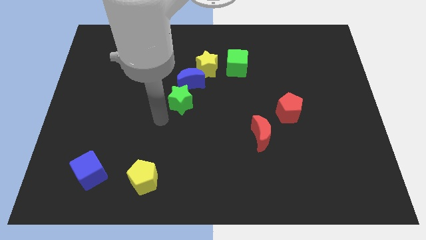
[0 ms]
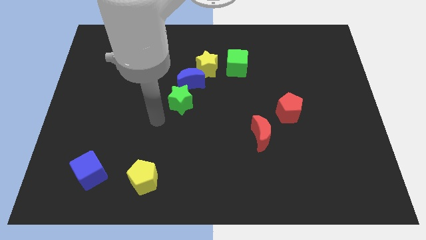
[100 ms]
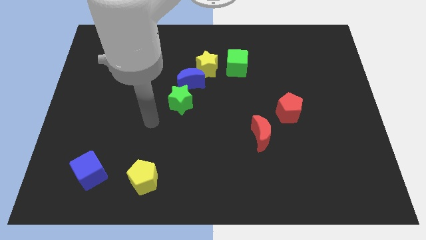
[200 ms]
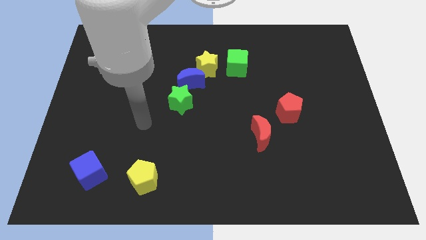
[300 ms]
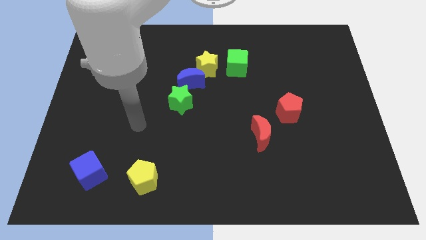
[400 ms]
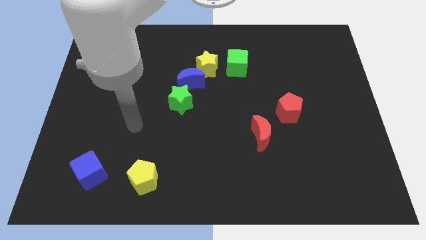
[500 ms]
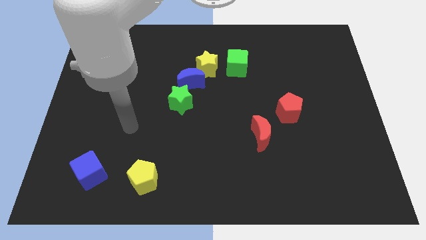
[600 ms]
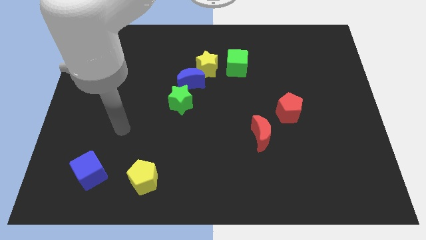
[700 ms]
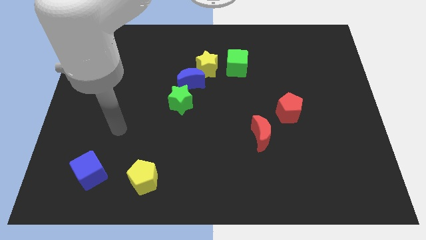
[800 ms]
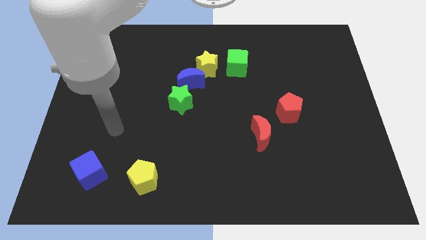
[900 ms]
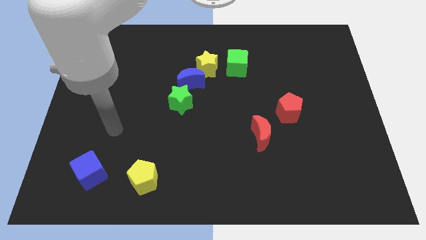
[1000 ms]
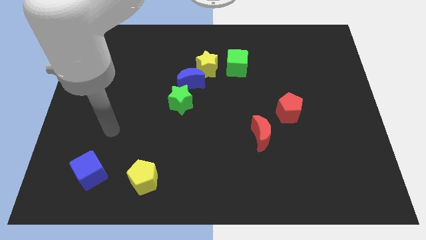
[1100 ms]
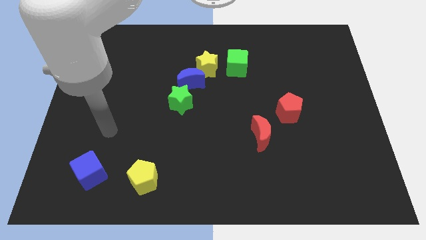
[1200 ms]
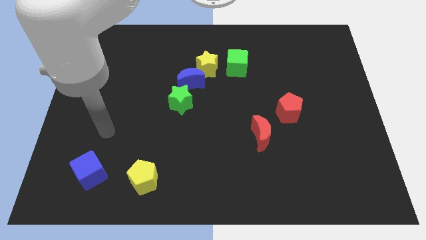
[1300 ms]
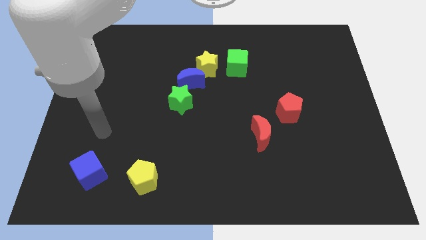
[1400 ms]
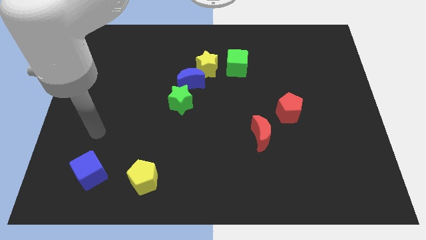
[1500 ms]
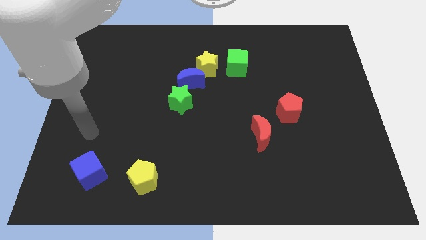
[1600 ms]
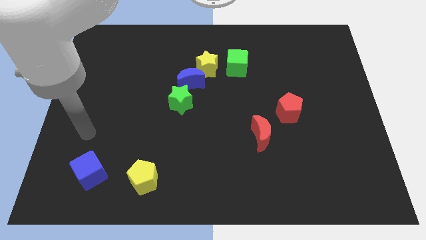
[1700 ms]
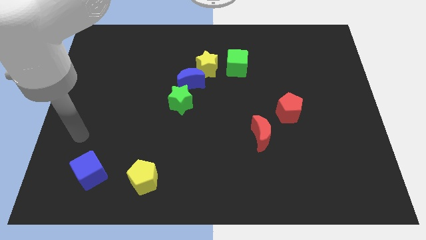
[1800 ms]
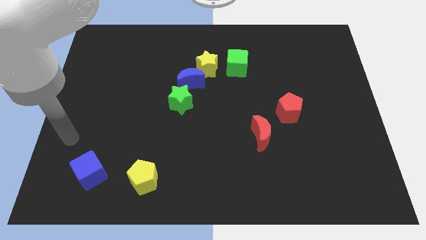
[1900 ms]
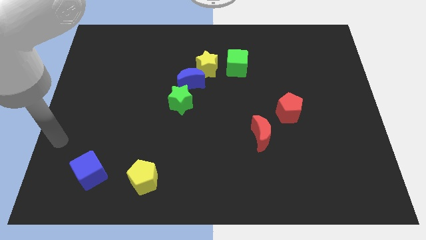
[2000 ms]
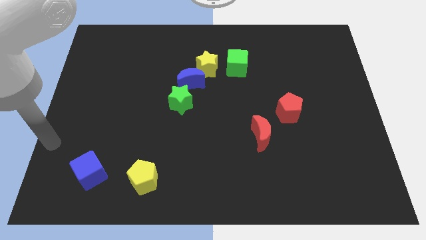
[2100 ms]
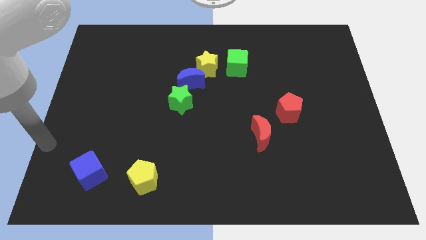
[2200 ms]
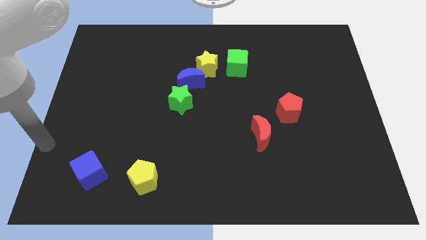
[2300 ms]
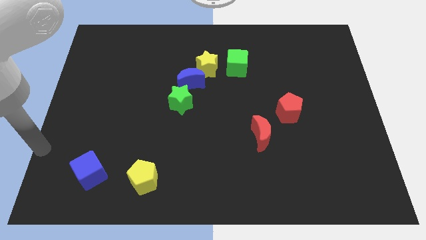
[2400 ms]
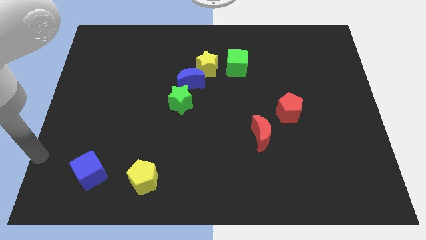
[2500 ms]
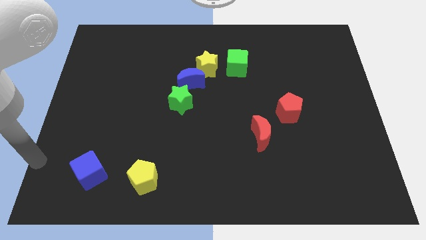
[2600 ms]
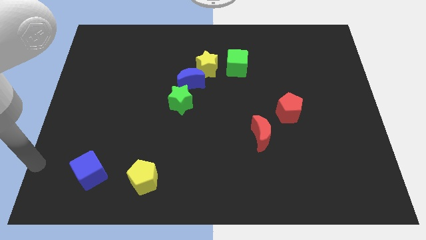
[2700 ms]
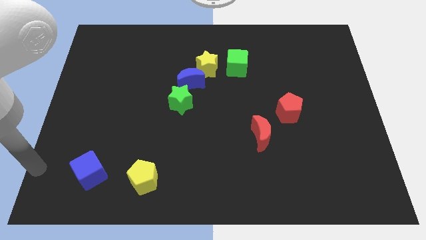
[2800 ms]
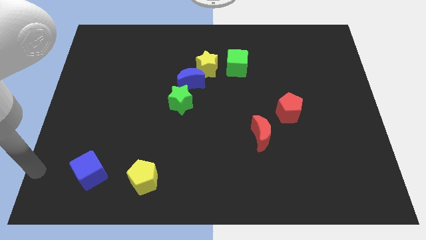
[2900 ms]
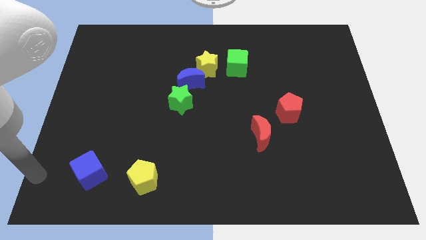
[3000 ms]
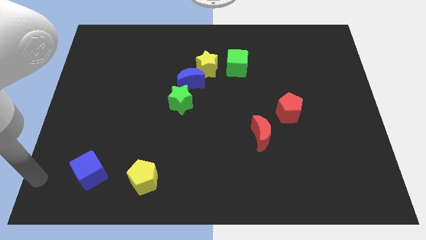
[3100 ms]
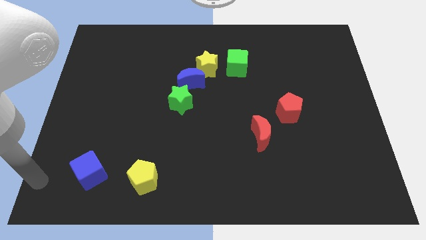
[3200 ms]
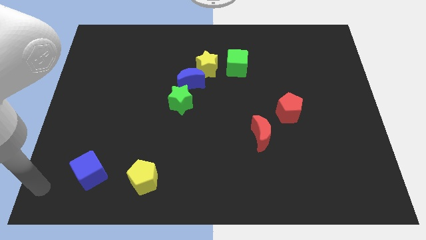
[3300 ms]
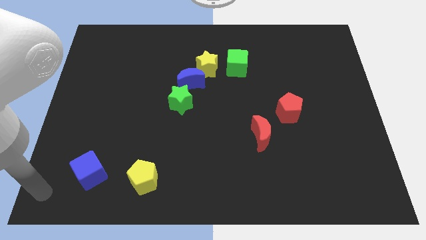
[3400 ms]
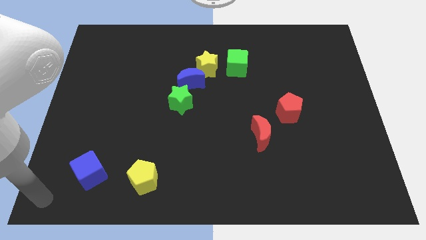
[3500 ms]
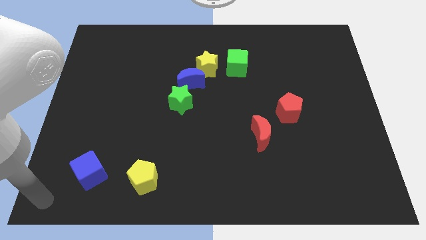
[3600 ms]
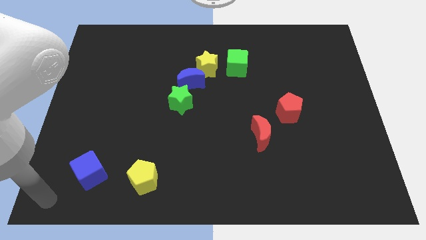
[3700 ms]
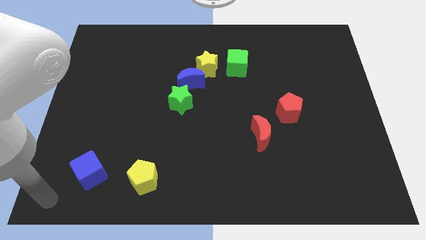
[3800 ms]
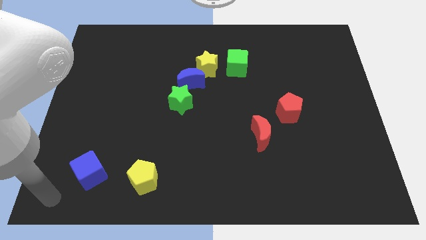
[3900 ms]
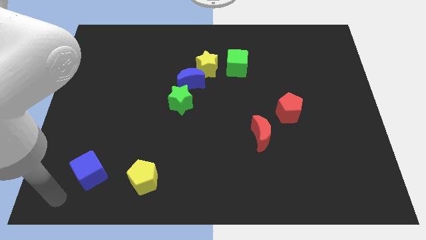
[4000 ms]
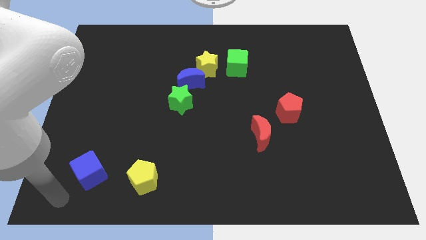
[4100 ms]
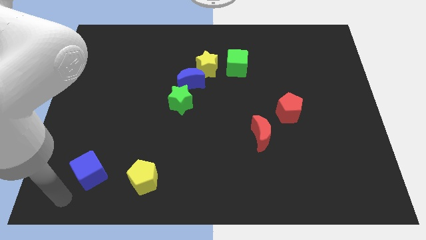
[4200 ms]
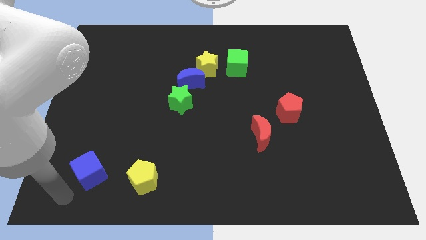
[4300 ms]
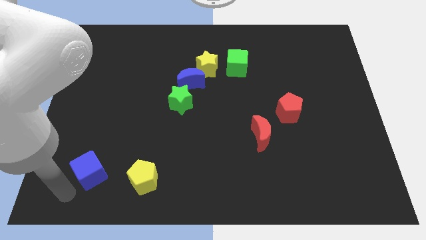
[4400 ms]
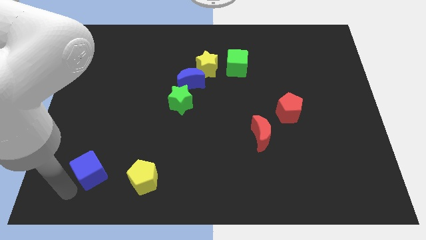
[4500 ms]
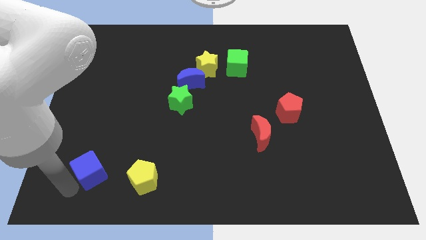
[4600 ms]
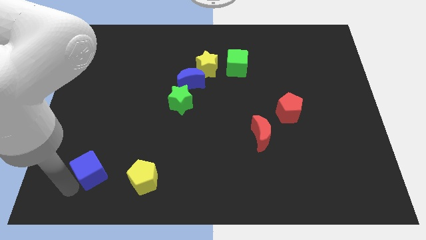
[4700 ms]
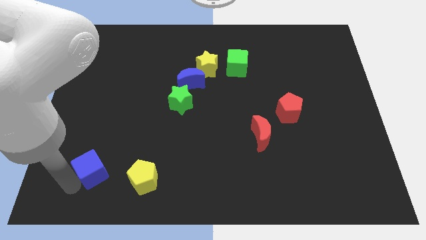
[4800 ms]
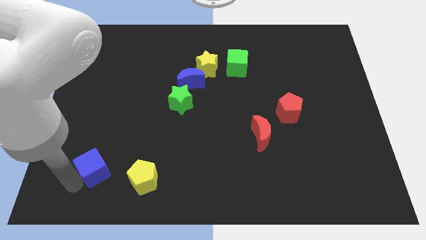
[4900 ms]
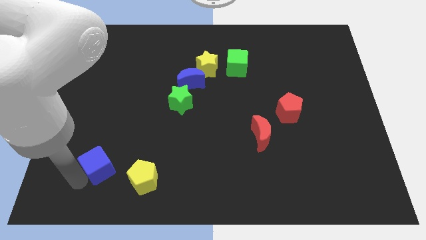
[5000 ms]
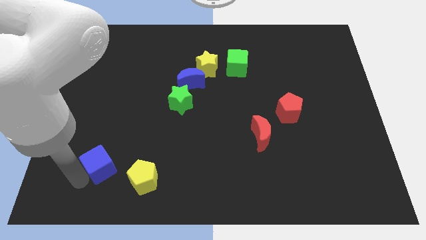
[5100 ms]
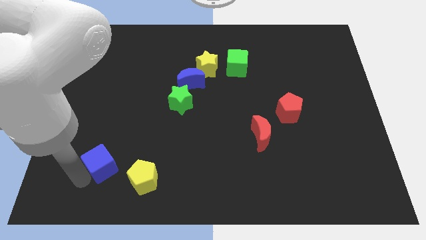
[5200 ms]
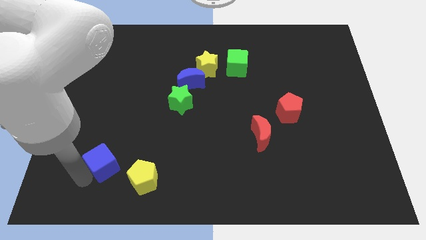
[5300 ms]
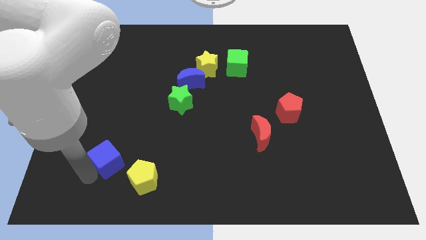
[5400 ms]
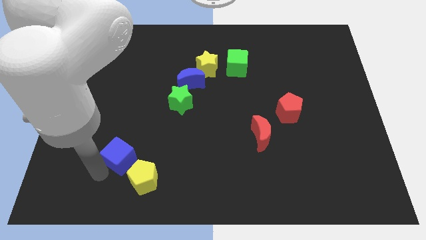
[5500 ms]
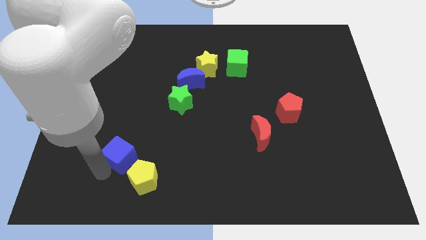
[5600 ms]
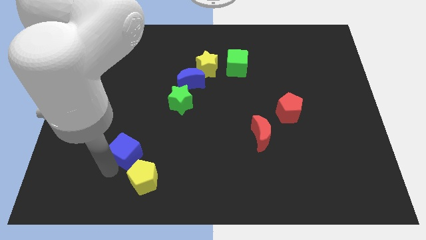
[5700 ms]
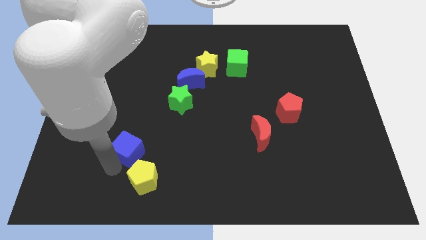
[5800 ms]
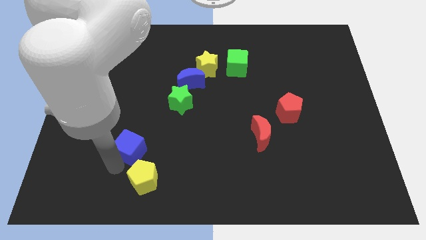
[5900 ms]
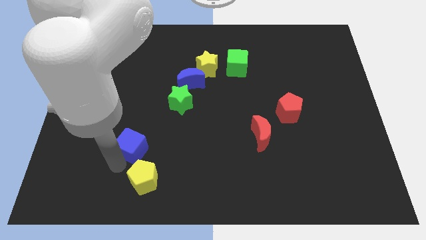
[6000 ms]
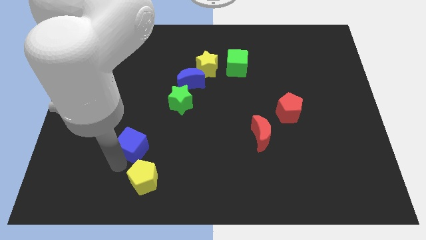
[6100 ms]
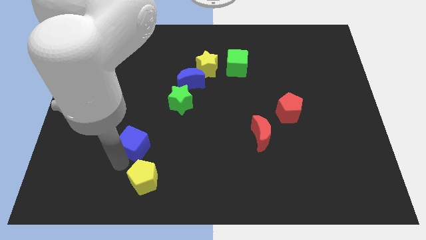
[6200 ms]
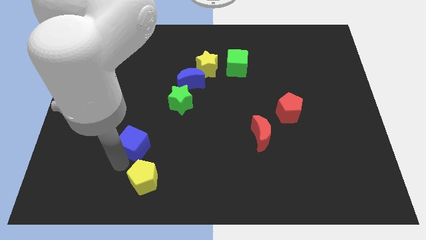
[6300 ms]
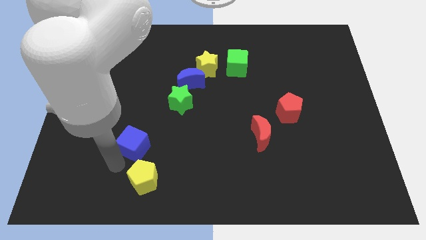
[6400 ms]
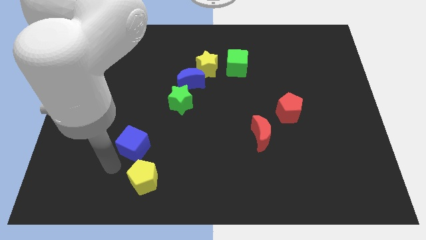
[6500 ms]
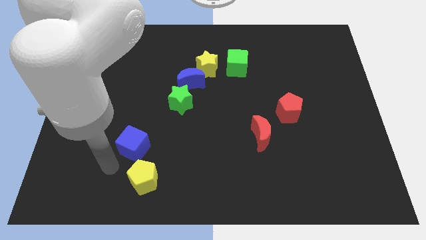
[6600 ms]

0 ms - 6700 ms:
push the blue cube to the top of the yellow pentagon

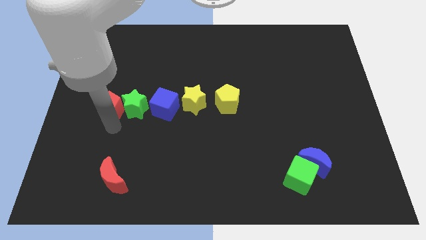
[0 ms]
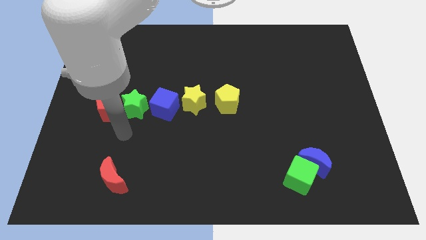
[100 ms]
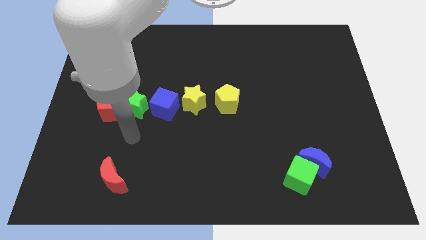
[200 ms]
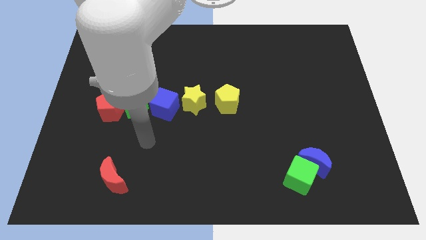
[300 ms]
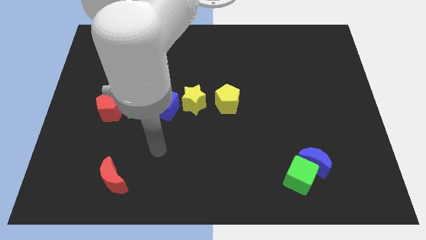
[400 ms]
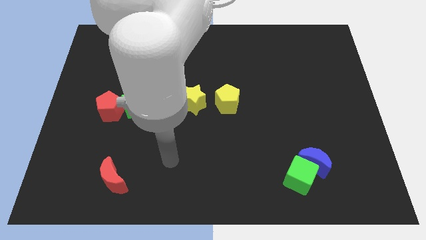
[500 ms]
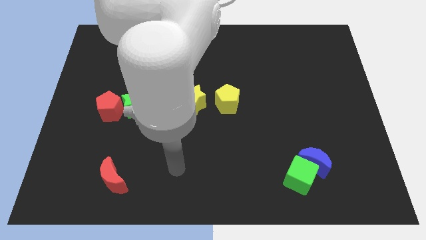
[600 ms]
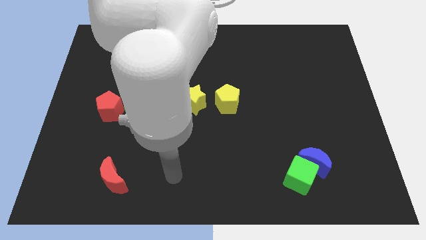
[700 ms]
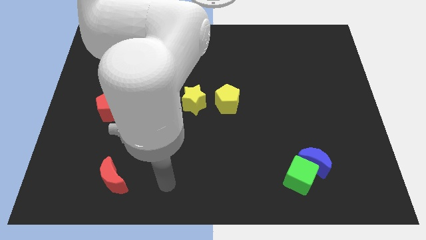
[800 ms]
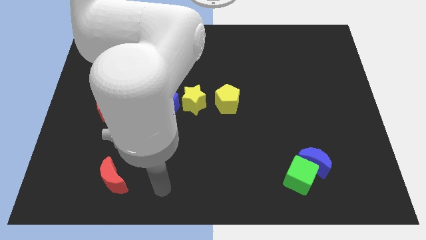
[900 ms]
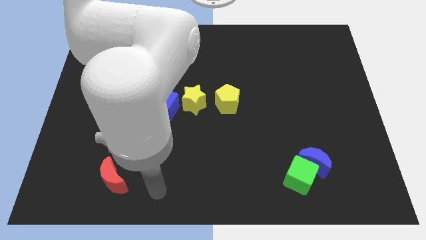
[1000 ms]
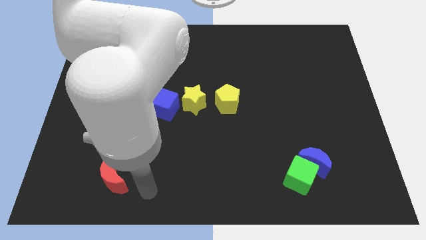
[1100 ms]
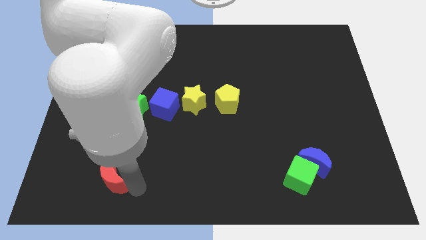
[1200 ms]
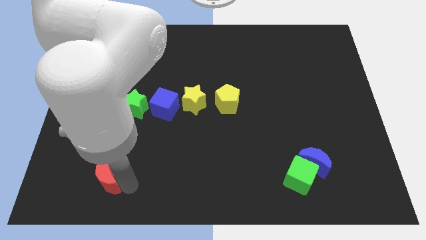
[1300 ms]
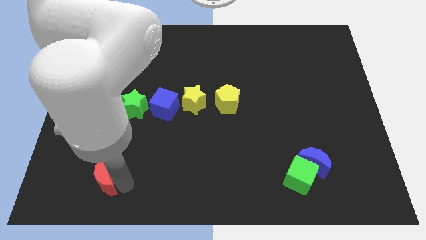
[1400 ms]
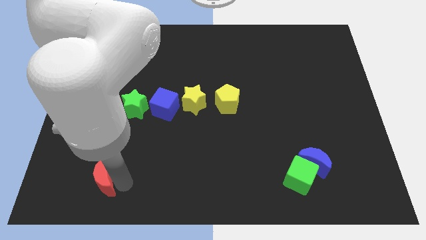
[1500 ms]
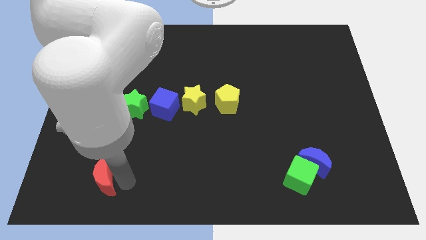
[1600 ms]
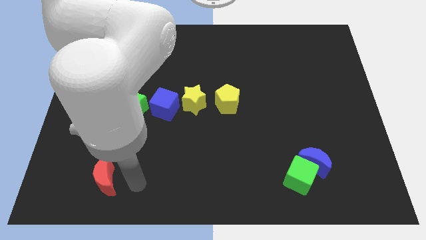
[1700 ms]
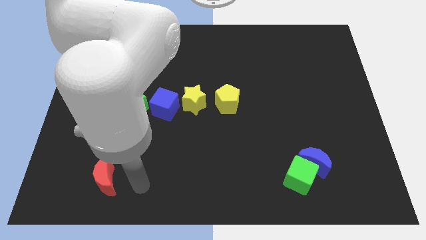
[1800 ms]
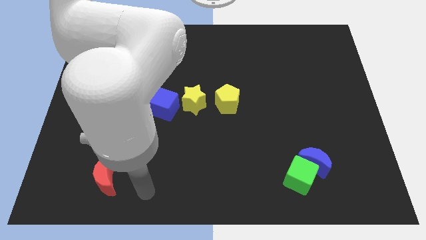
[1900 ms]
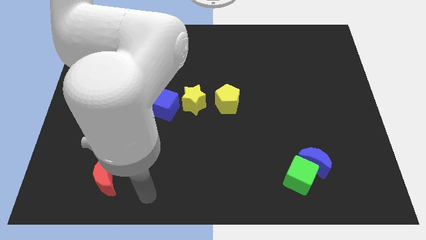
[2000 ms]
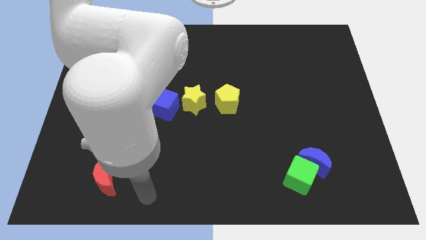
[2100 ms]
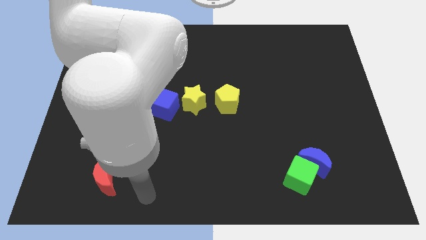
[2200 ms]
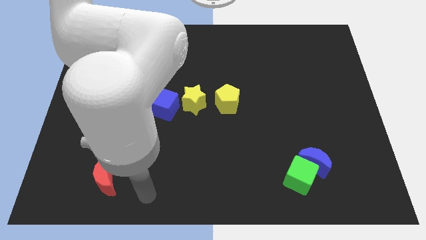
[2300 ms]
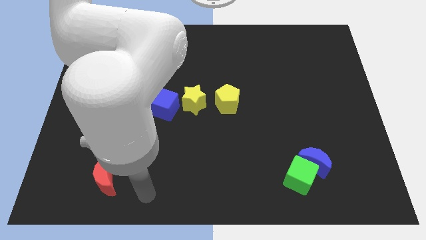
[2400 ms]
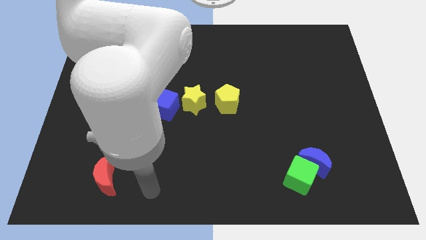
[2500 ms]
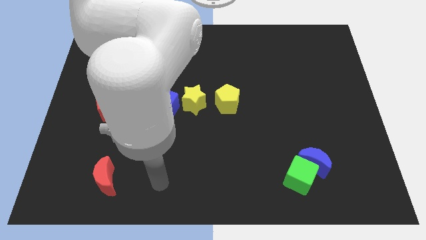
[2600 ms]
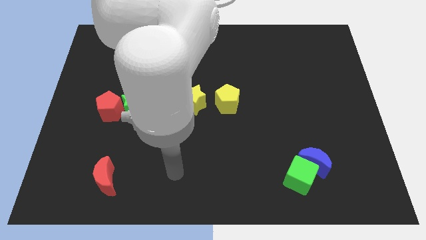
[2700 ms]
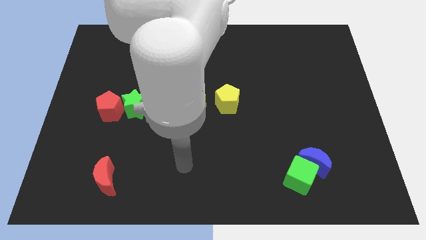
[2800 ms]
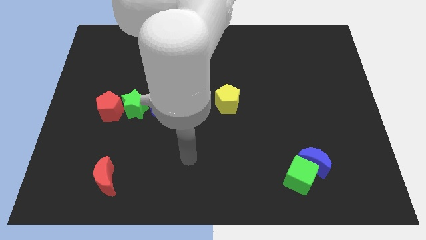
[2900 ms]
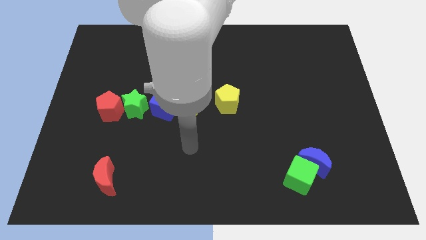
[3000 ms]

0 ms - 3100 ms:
slightly move the red moon towards the bottom left corner
